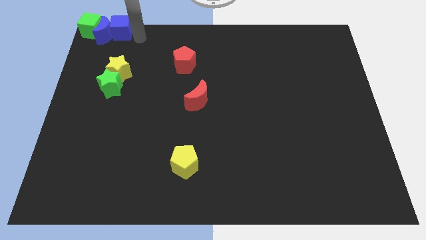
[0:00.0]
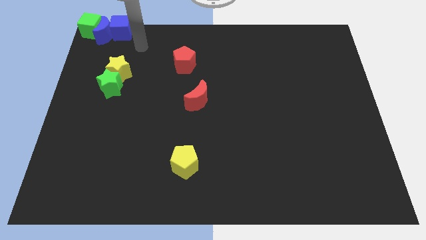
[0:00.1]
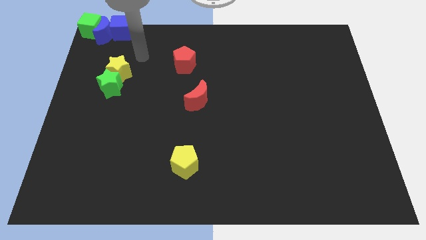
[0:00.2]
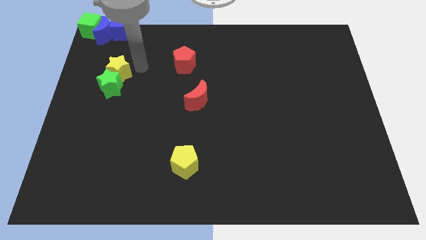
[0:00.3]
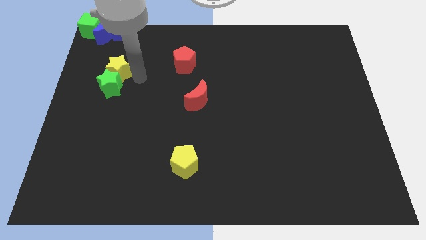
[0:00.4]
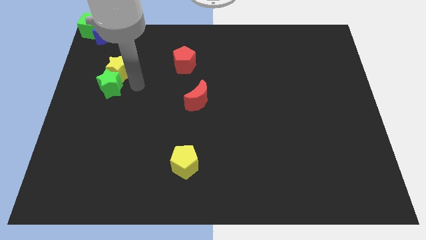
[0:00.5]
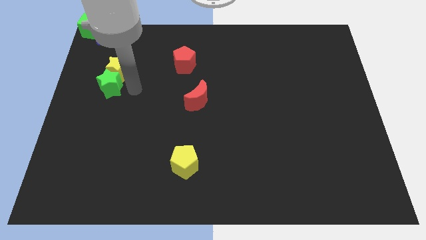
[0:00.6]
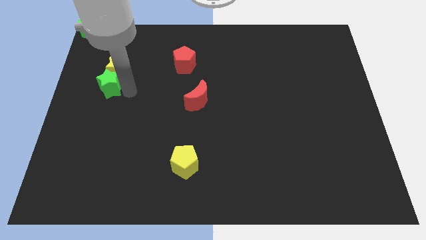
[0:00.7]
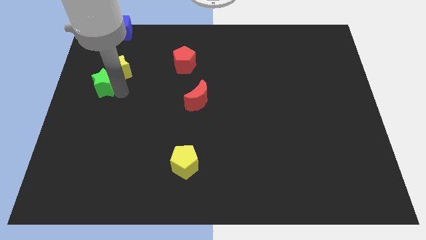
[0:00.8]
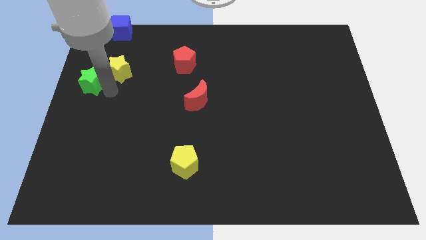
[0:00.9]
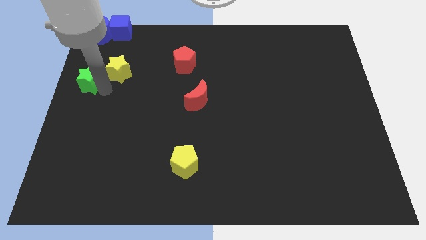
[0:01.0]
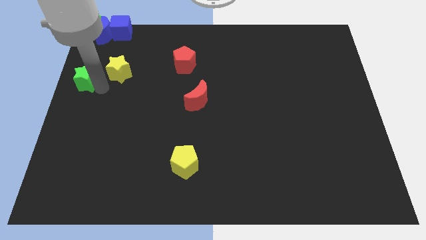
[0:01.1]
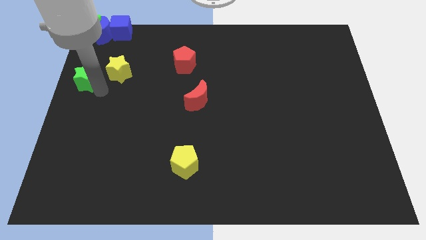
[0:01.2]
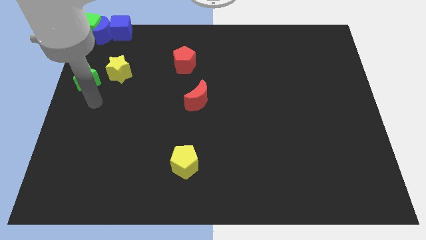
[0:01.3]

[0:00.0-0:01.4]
separate green star and yellow star

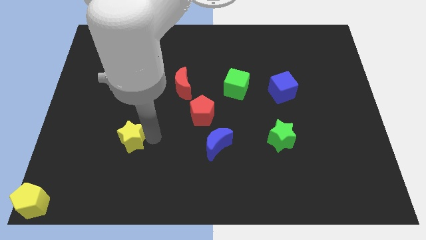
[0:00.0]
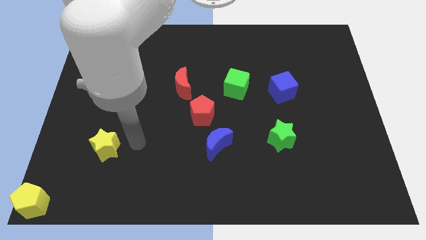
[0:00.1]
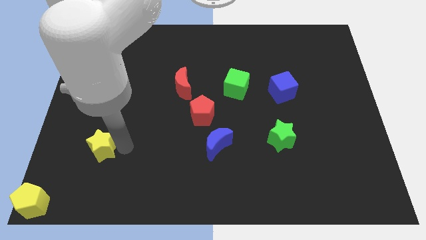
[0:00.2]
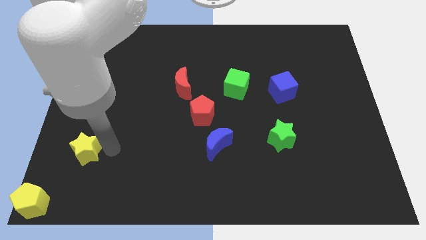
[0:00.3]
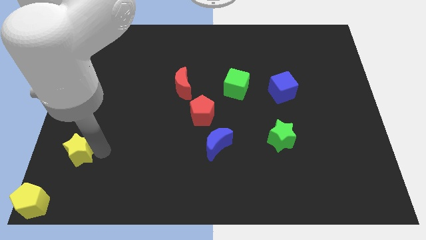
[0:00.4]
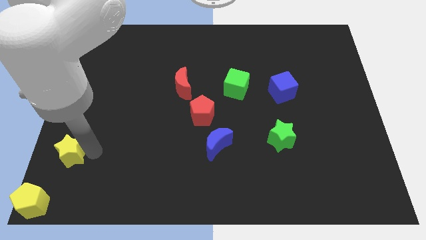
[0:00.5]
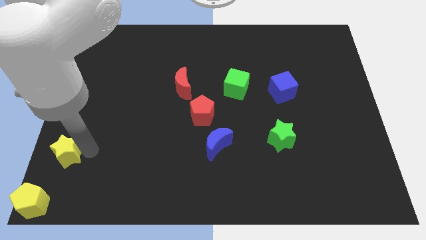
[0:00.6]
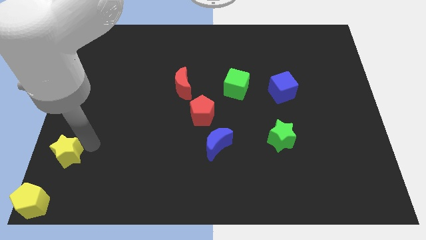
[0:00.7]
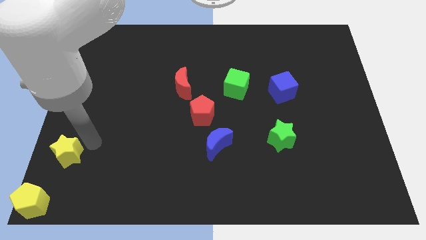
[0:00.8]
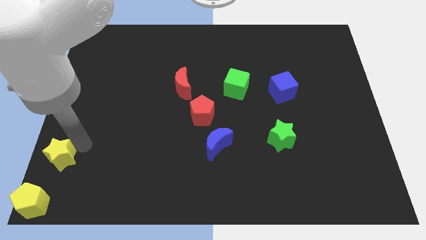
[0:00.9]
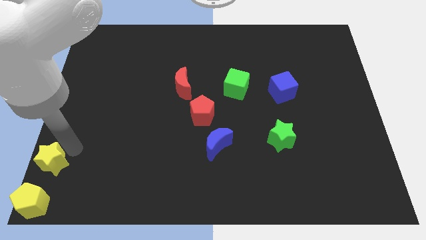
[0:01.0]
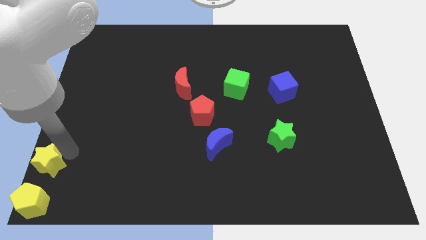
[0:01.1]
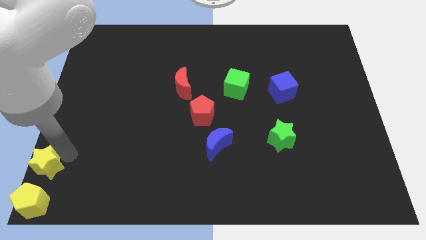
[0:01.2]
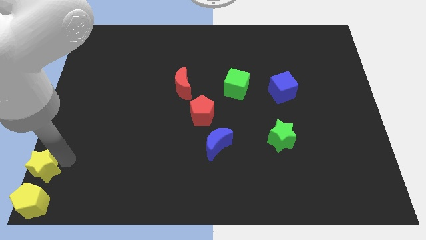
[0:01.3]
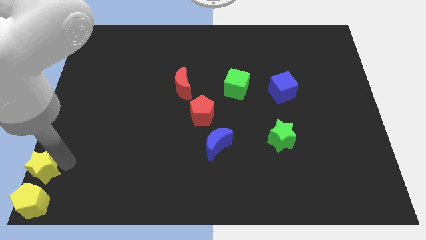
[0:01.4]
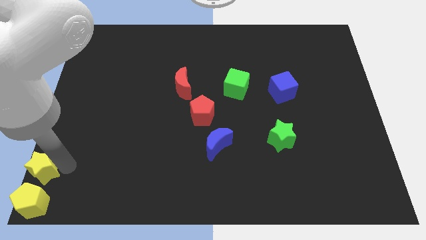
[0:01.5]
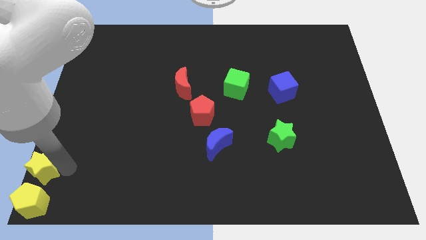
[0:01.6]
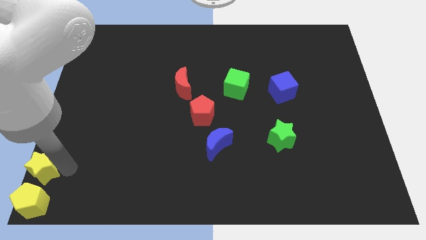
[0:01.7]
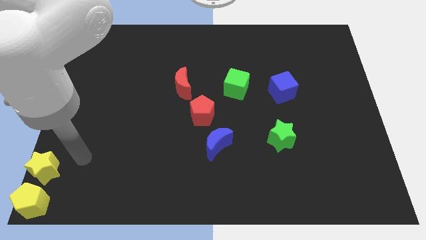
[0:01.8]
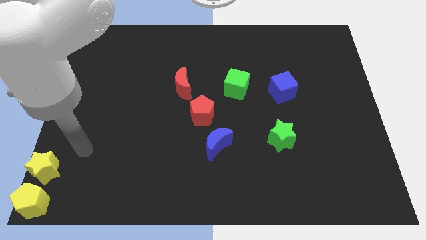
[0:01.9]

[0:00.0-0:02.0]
drag the yellow star towards the yellow pentagon

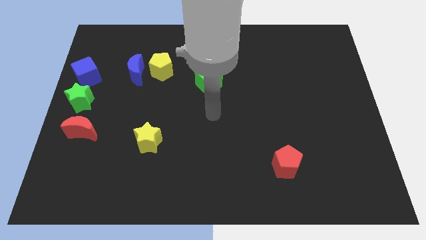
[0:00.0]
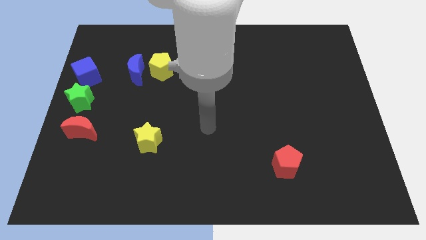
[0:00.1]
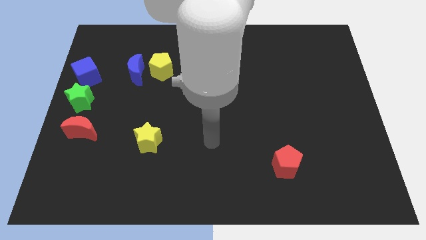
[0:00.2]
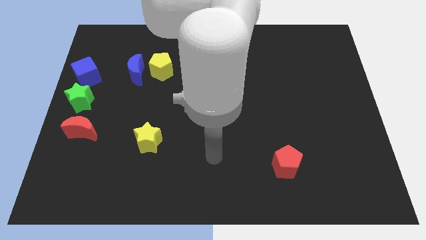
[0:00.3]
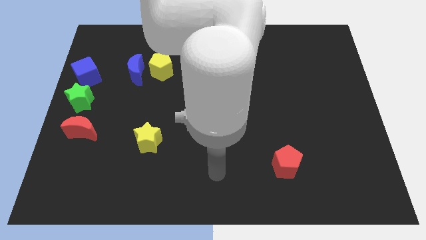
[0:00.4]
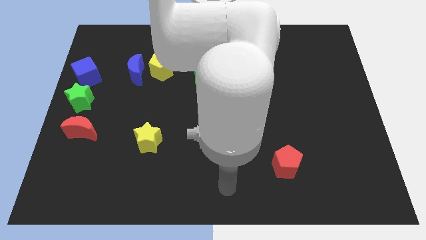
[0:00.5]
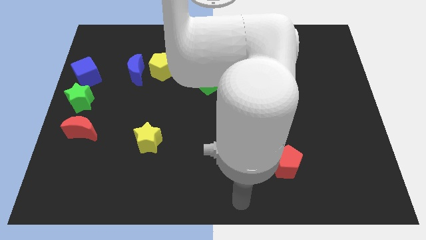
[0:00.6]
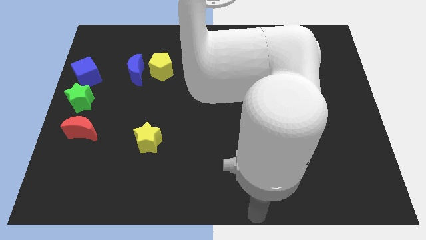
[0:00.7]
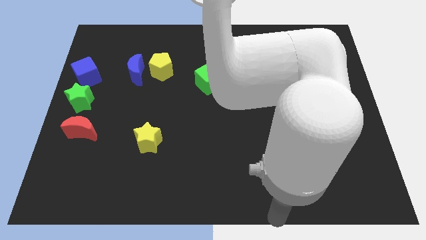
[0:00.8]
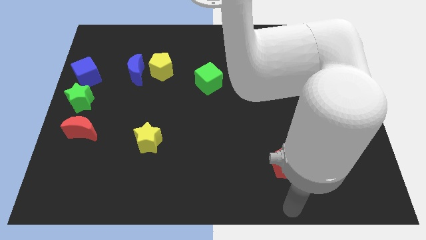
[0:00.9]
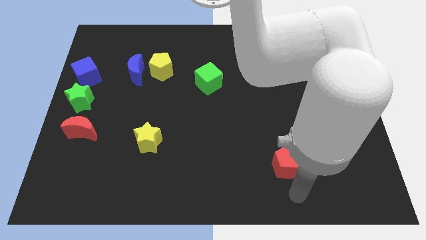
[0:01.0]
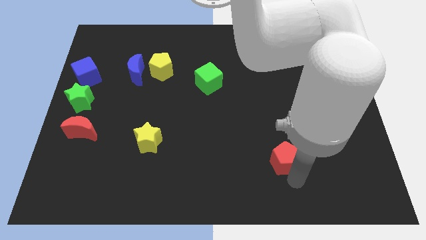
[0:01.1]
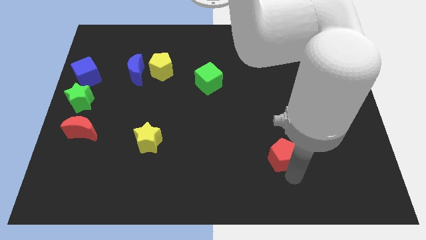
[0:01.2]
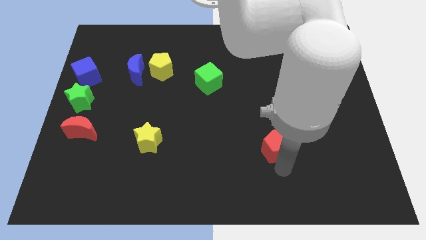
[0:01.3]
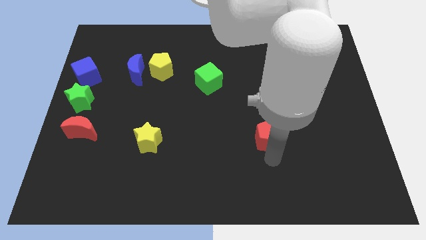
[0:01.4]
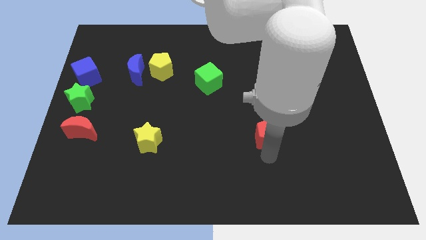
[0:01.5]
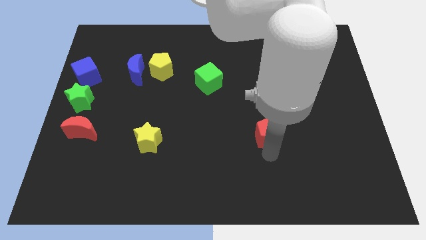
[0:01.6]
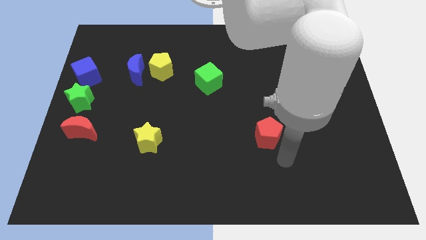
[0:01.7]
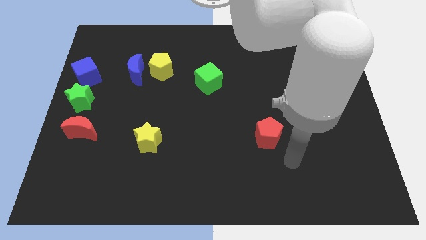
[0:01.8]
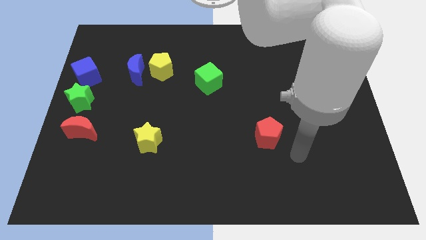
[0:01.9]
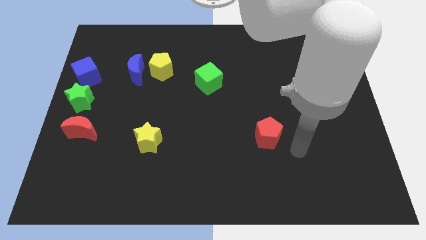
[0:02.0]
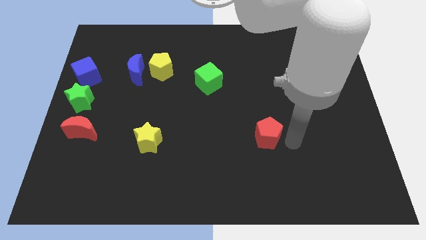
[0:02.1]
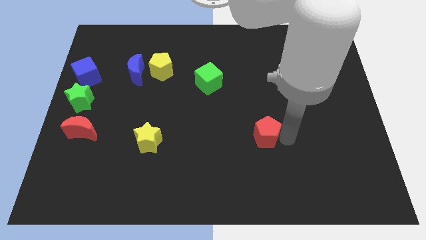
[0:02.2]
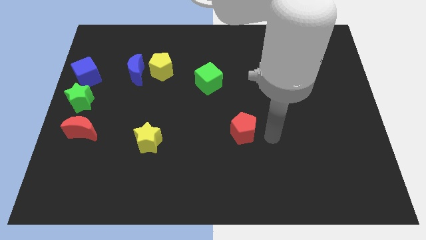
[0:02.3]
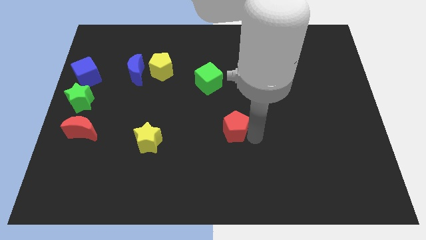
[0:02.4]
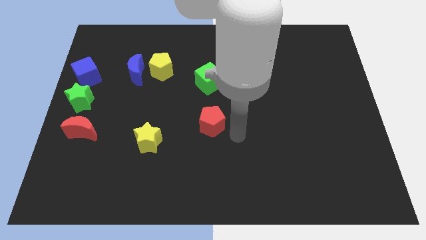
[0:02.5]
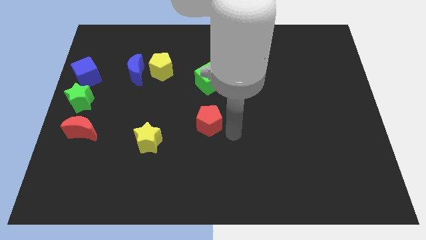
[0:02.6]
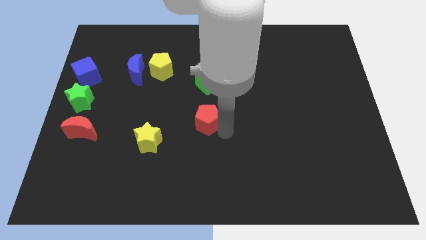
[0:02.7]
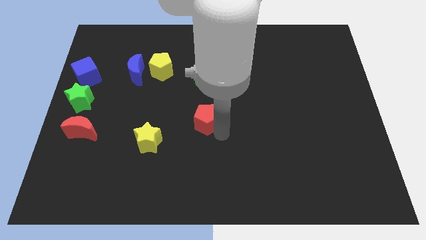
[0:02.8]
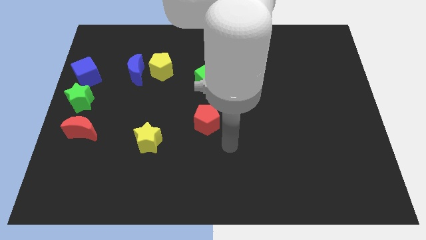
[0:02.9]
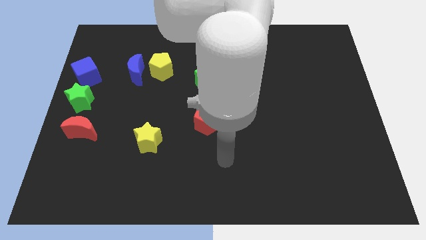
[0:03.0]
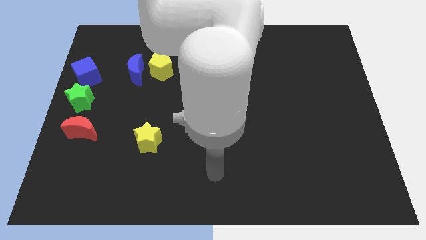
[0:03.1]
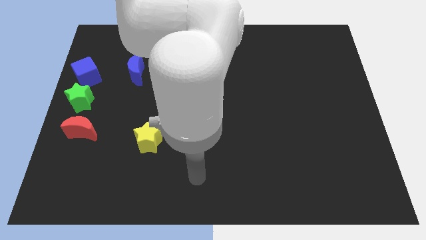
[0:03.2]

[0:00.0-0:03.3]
place the red pentagon at center of the board

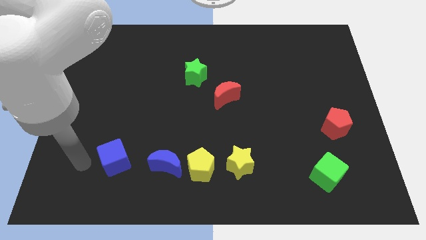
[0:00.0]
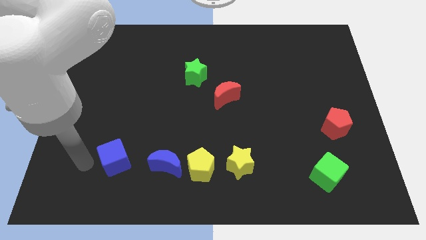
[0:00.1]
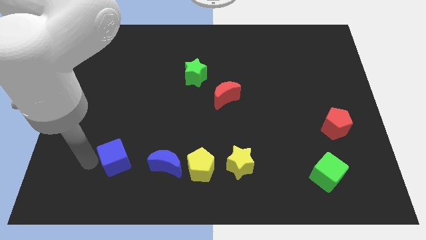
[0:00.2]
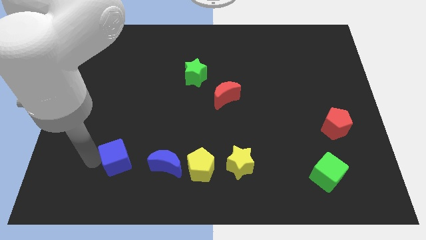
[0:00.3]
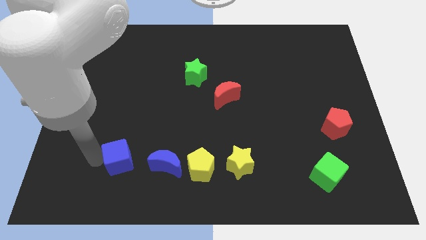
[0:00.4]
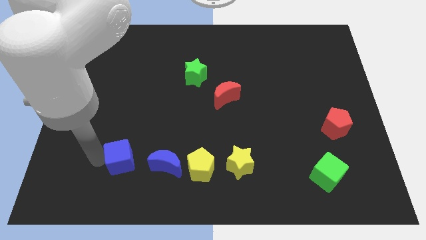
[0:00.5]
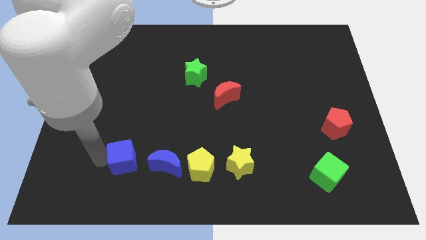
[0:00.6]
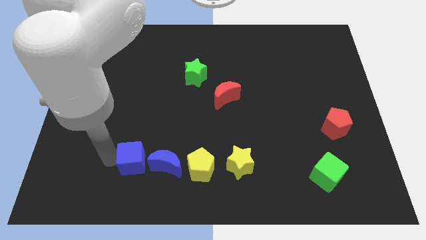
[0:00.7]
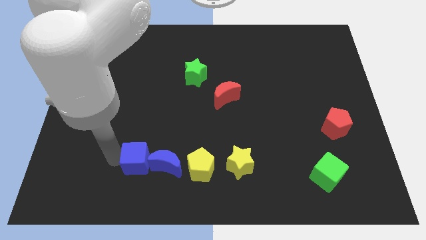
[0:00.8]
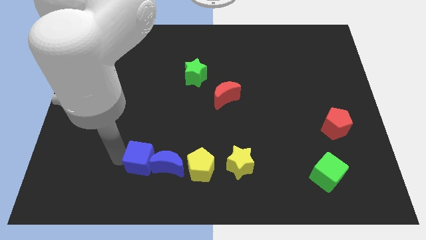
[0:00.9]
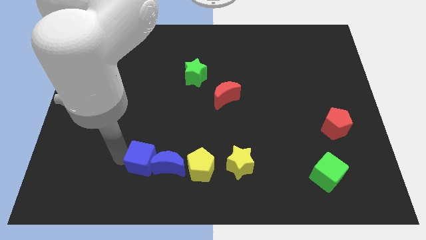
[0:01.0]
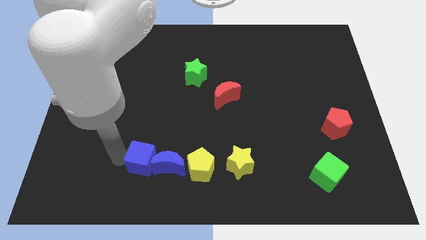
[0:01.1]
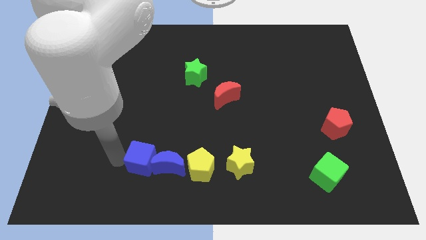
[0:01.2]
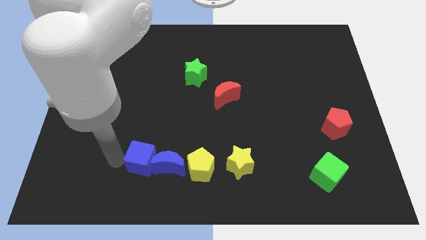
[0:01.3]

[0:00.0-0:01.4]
push the blue cube into the blue moon

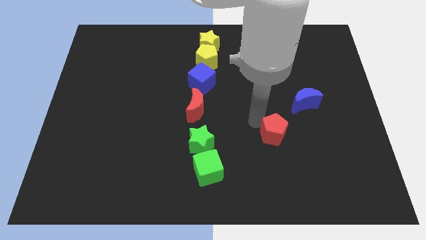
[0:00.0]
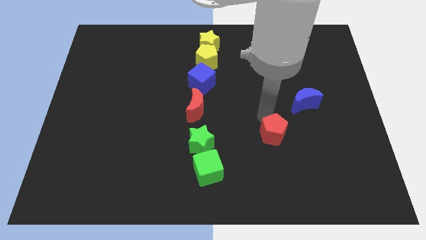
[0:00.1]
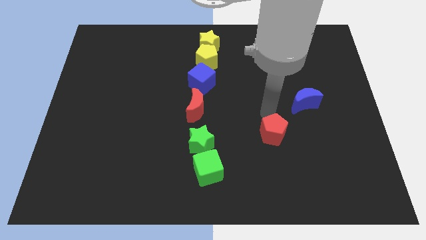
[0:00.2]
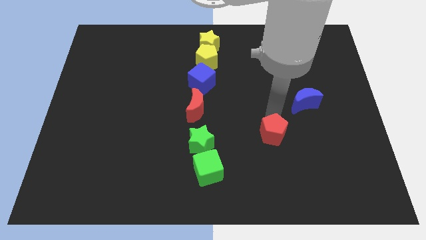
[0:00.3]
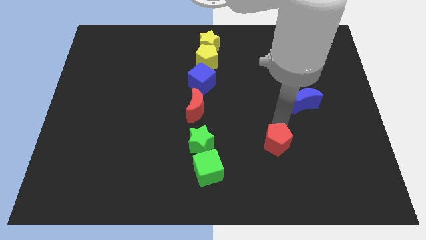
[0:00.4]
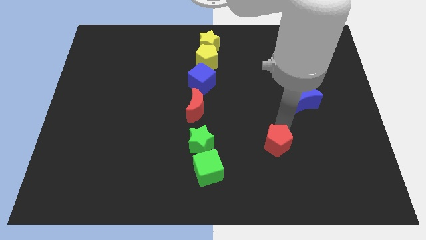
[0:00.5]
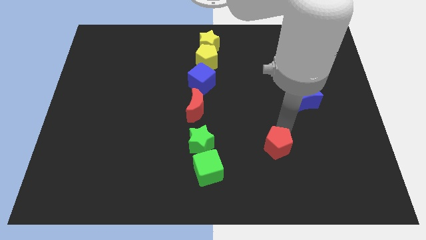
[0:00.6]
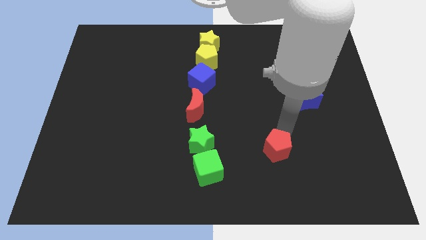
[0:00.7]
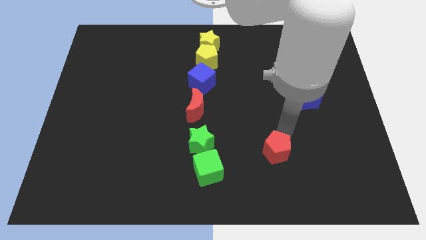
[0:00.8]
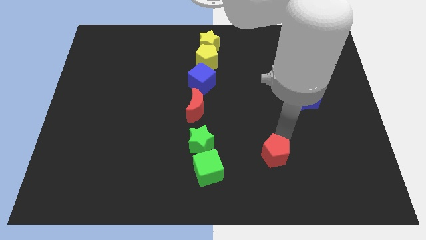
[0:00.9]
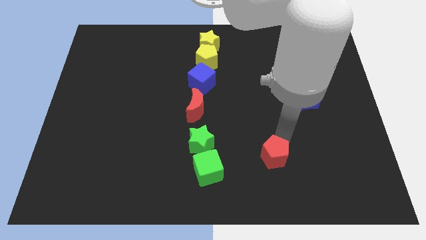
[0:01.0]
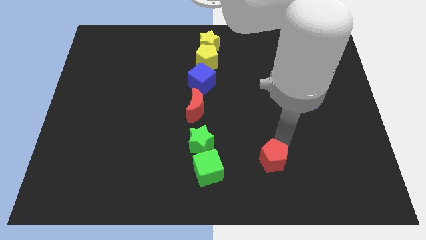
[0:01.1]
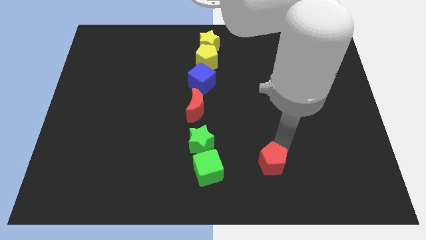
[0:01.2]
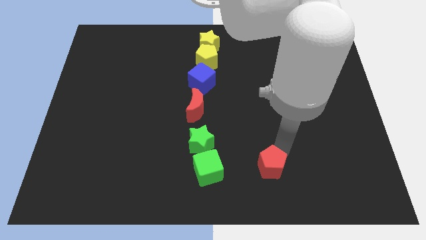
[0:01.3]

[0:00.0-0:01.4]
push the red pentagon at the right side of the green cube
